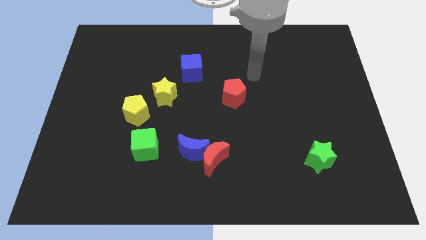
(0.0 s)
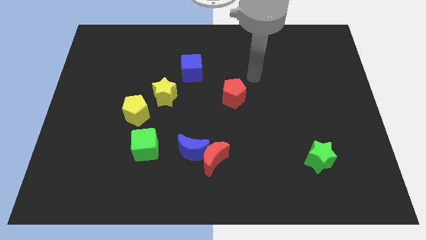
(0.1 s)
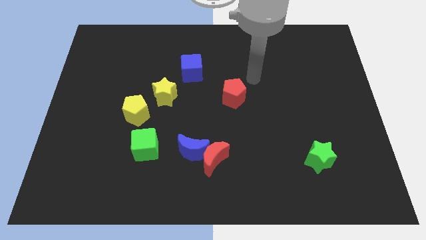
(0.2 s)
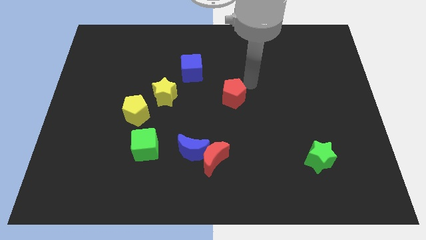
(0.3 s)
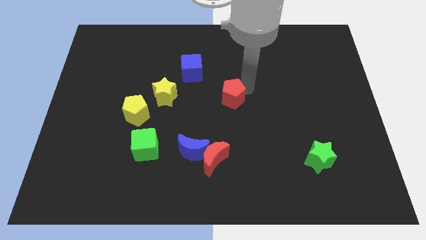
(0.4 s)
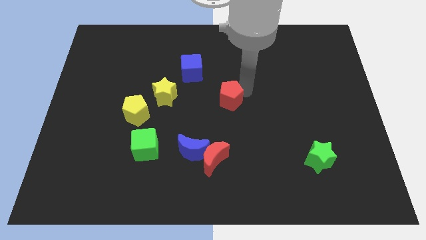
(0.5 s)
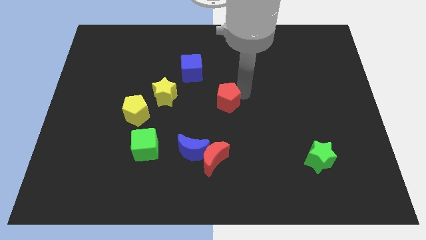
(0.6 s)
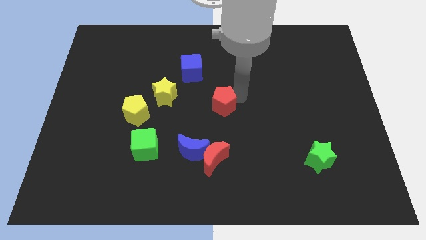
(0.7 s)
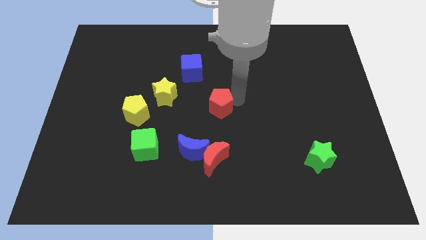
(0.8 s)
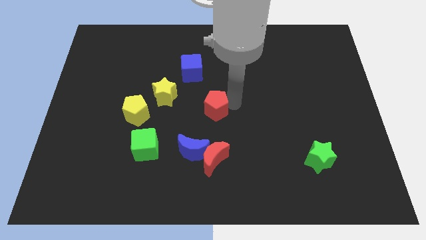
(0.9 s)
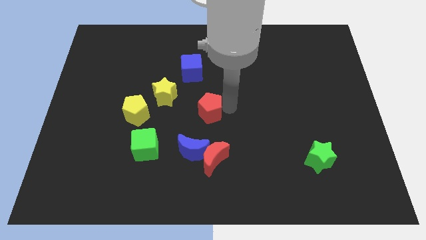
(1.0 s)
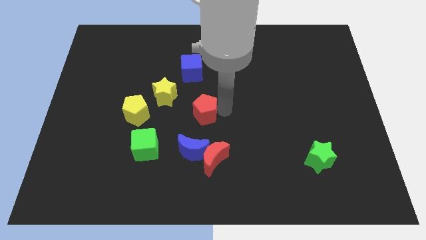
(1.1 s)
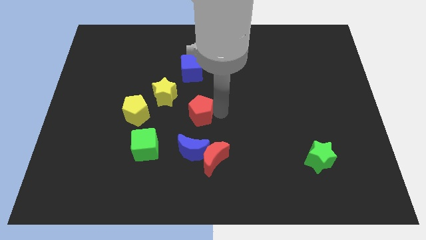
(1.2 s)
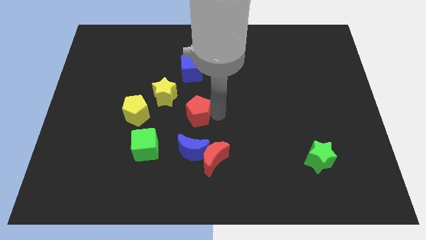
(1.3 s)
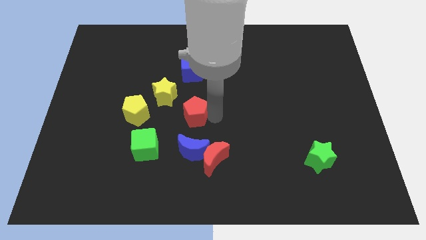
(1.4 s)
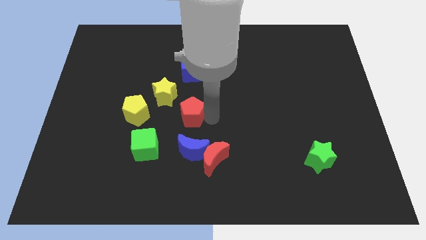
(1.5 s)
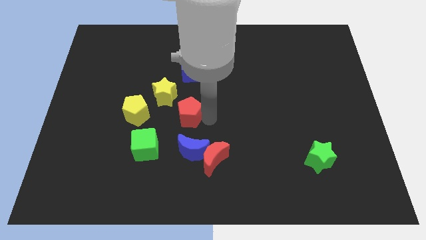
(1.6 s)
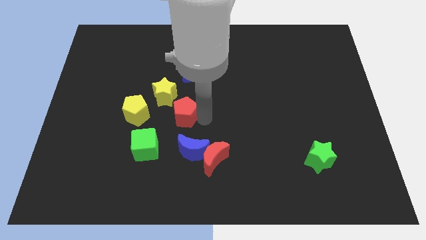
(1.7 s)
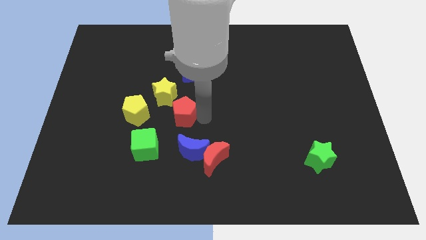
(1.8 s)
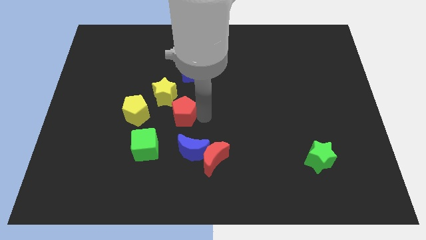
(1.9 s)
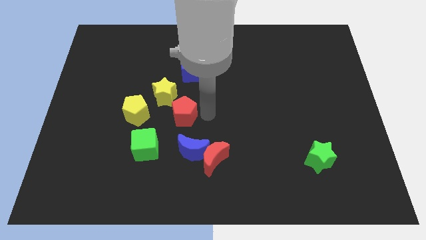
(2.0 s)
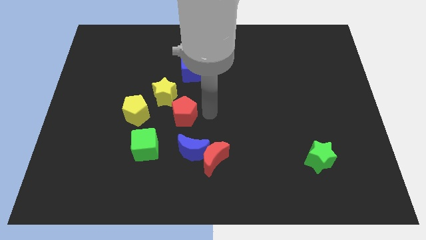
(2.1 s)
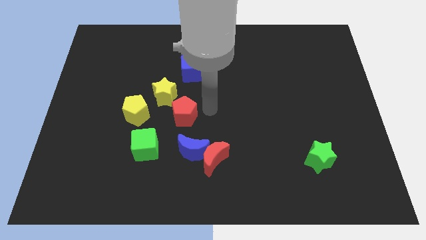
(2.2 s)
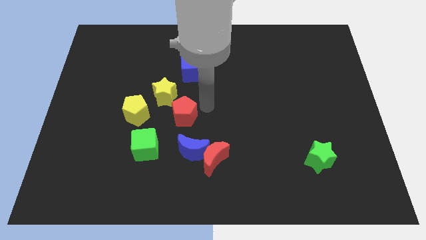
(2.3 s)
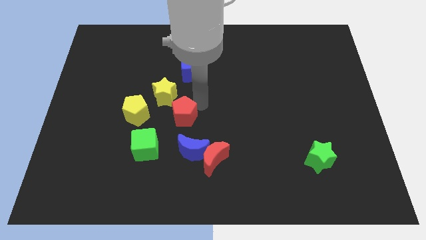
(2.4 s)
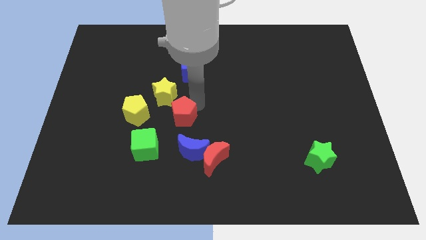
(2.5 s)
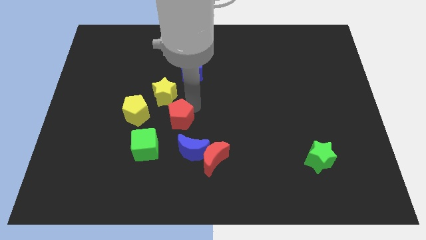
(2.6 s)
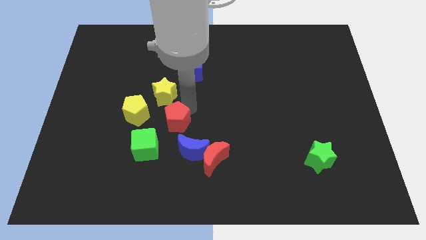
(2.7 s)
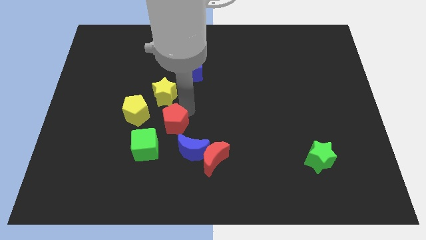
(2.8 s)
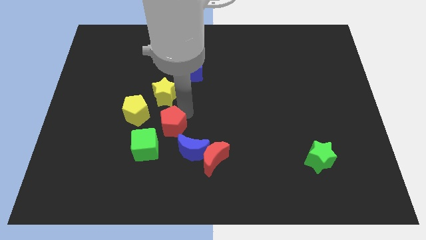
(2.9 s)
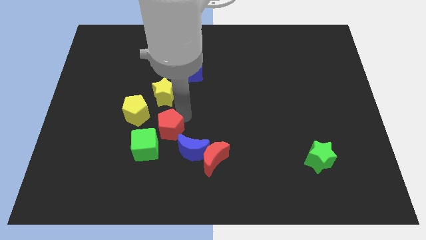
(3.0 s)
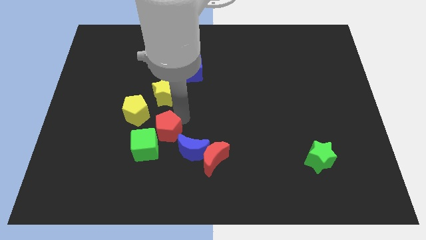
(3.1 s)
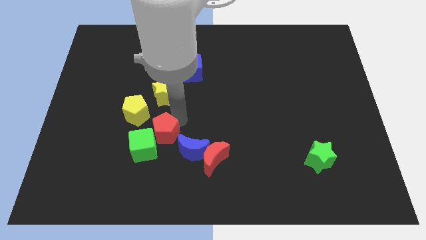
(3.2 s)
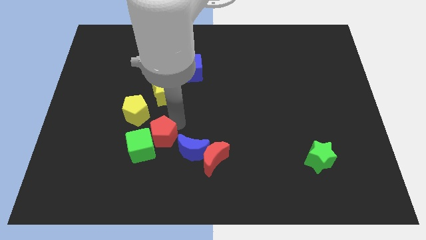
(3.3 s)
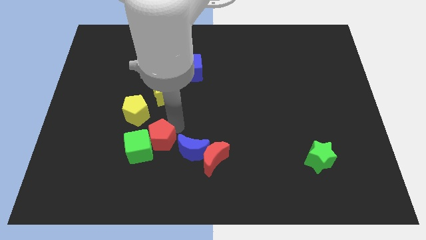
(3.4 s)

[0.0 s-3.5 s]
slide the red pentagon towards the green cube

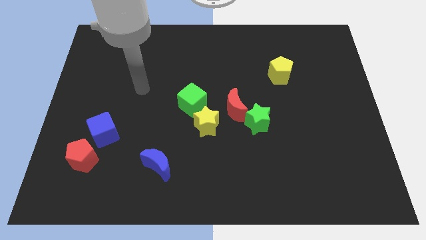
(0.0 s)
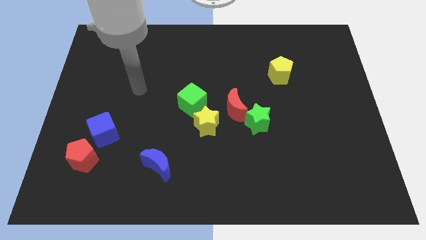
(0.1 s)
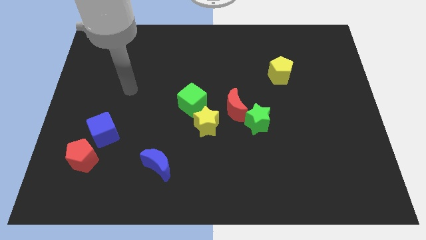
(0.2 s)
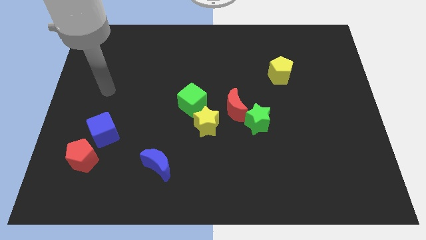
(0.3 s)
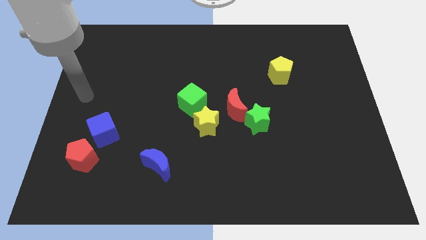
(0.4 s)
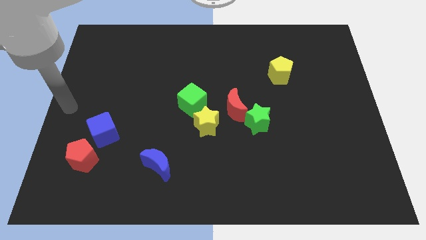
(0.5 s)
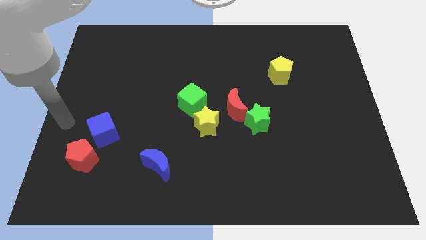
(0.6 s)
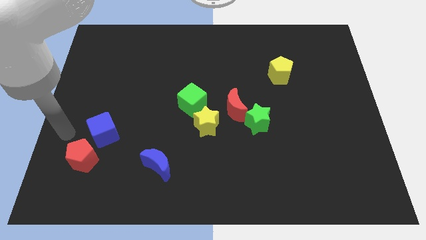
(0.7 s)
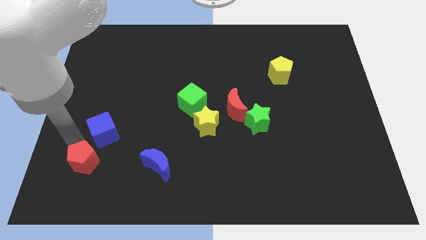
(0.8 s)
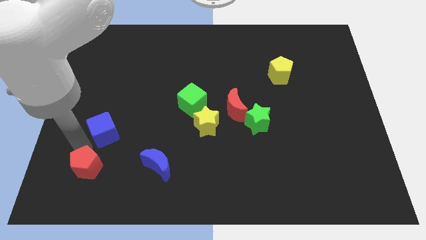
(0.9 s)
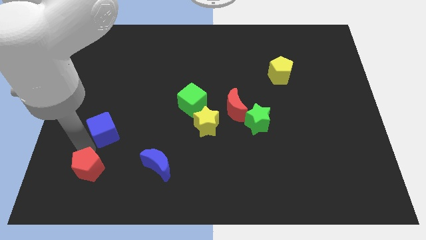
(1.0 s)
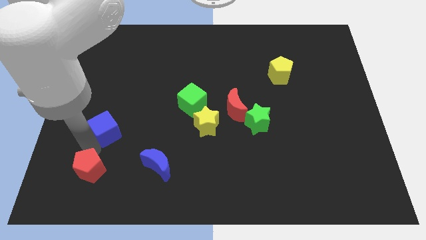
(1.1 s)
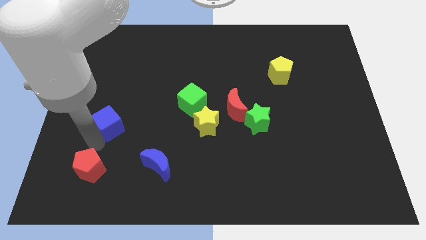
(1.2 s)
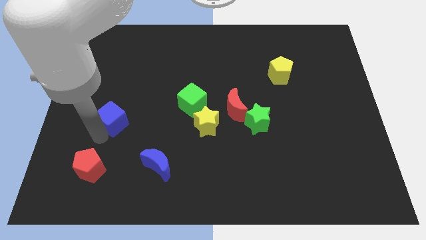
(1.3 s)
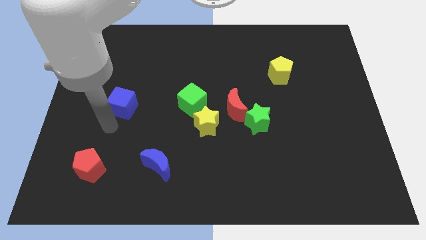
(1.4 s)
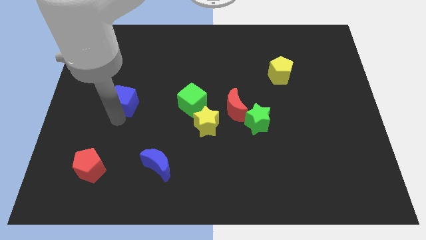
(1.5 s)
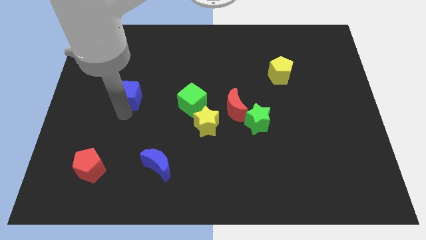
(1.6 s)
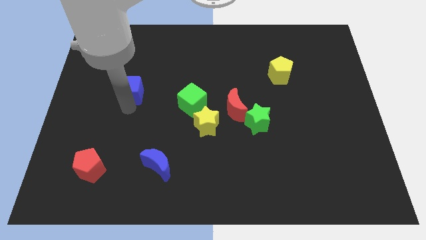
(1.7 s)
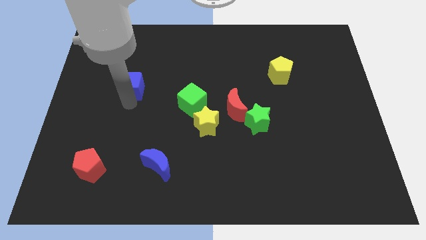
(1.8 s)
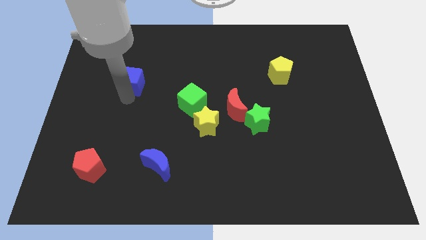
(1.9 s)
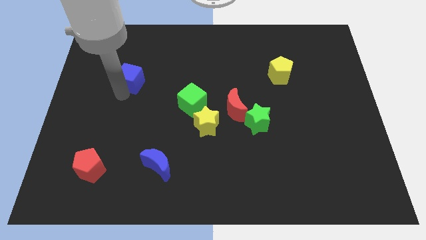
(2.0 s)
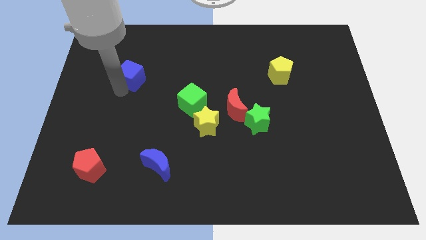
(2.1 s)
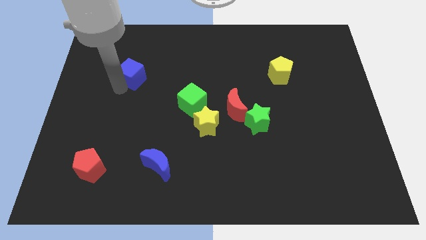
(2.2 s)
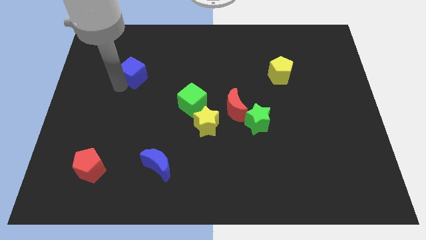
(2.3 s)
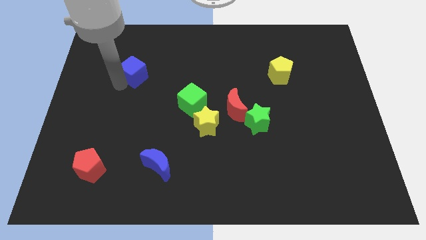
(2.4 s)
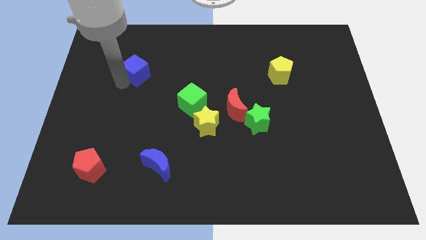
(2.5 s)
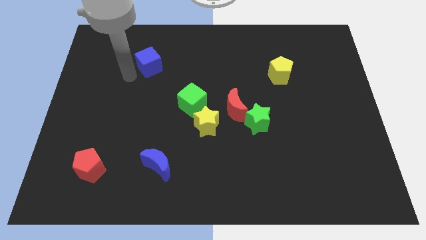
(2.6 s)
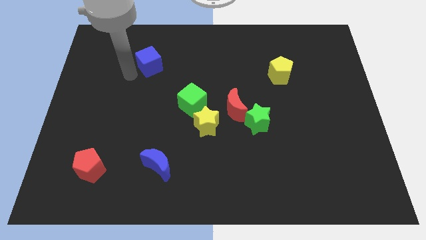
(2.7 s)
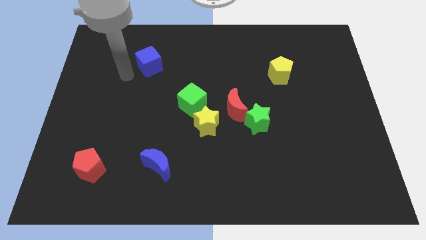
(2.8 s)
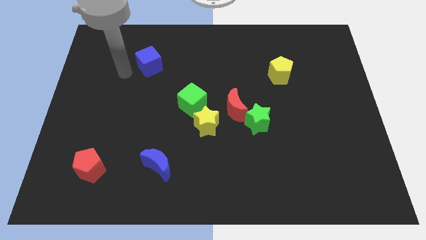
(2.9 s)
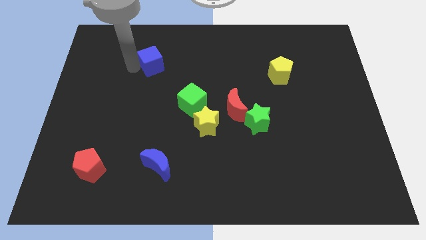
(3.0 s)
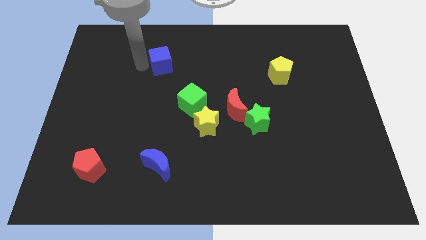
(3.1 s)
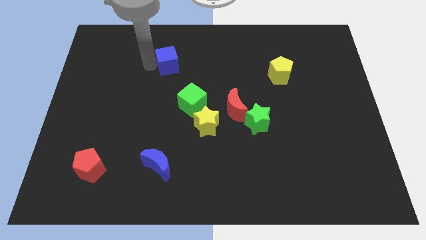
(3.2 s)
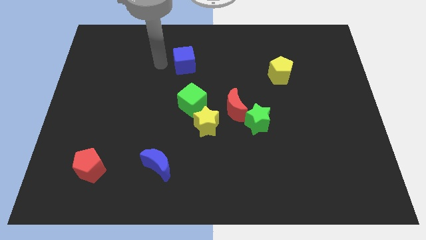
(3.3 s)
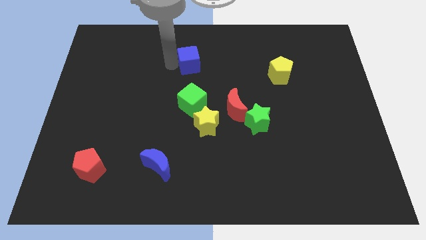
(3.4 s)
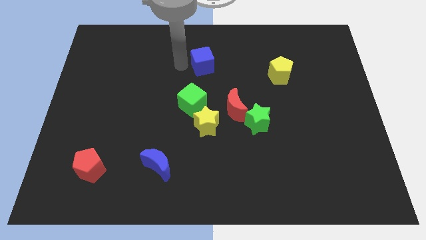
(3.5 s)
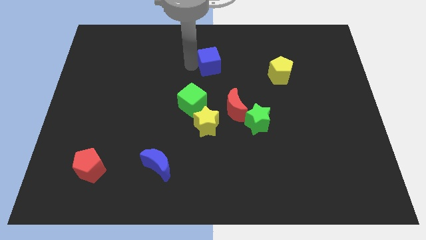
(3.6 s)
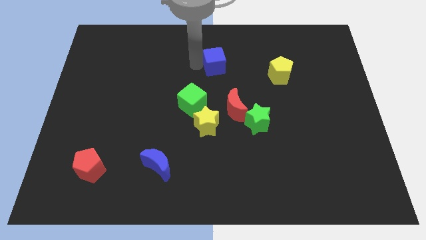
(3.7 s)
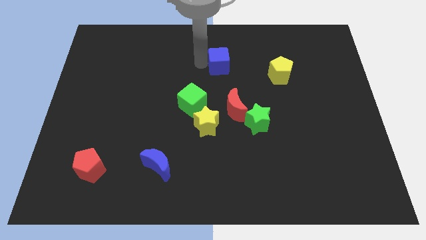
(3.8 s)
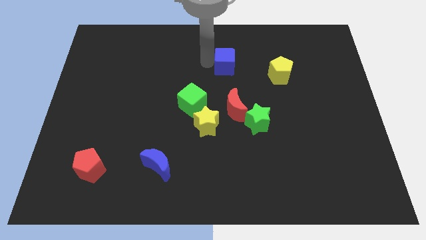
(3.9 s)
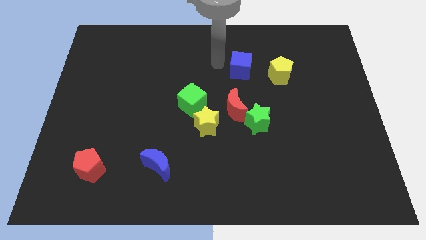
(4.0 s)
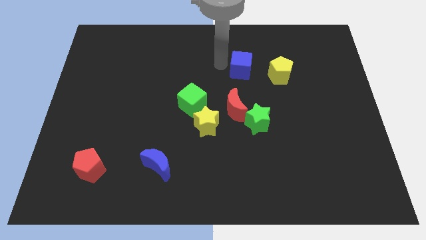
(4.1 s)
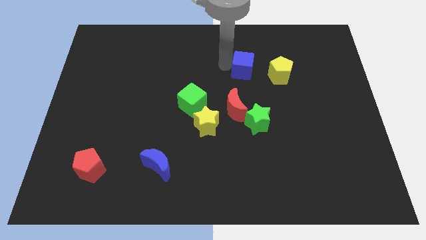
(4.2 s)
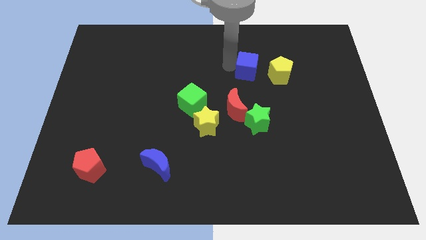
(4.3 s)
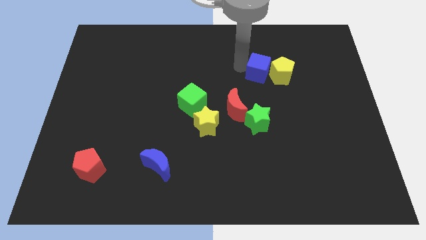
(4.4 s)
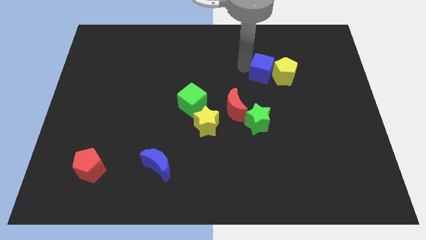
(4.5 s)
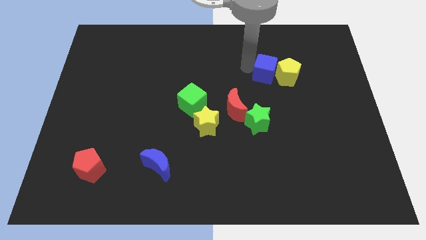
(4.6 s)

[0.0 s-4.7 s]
slide the blue cube close to the yellow pentagon
